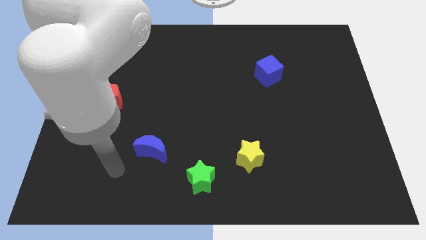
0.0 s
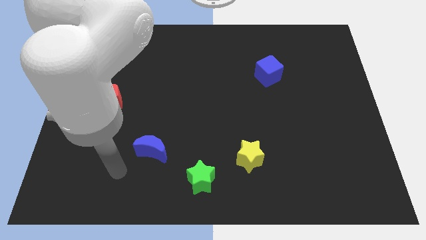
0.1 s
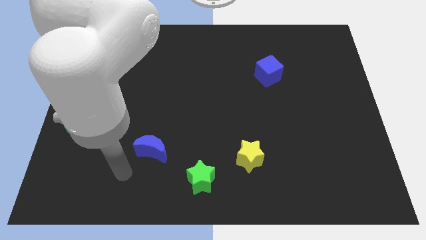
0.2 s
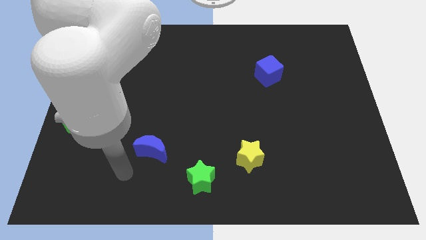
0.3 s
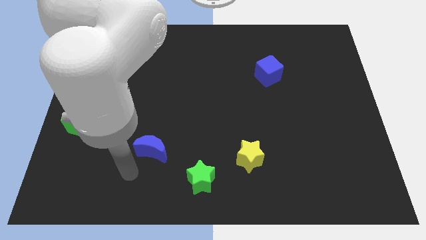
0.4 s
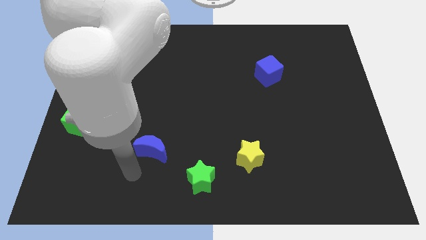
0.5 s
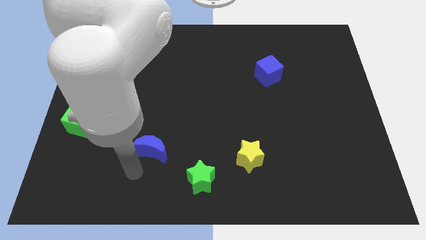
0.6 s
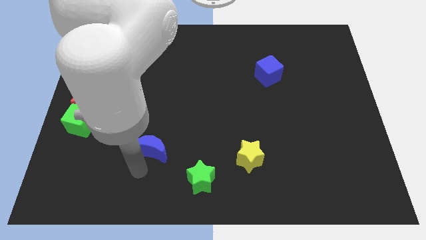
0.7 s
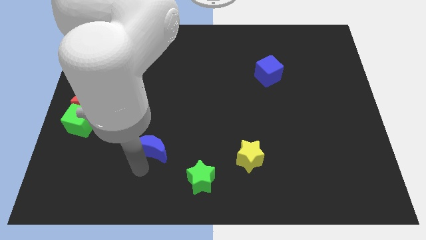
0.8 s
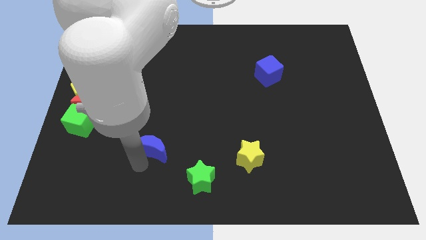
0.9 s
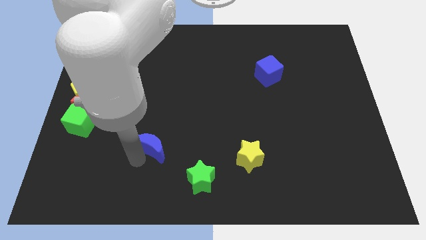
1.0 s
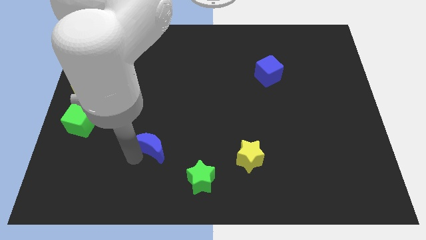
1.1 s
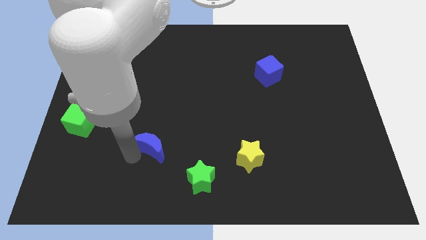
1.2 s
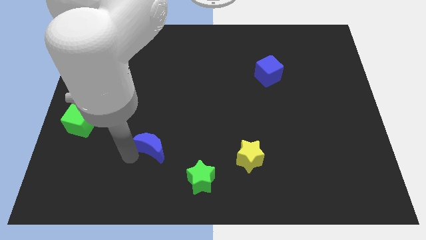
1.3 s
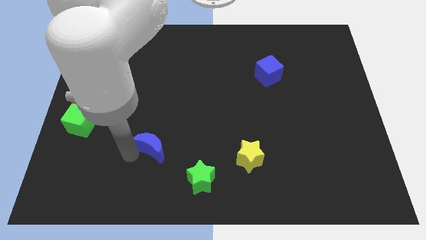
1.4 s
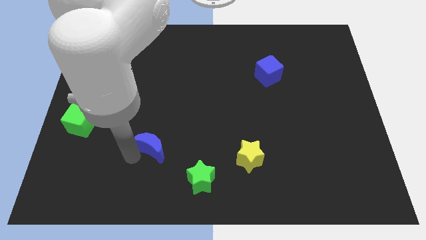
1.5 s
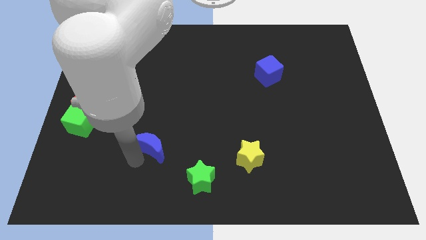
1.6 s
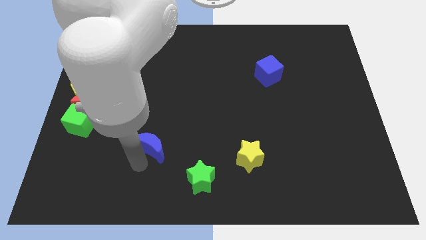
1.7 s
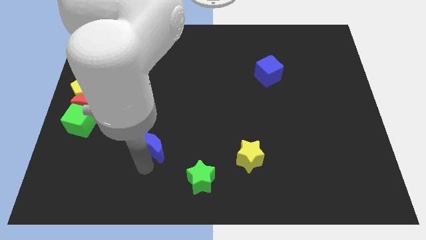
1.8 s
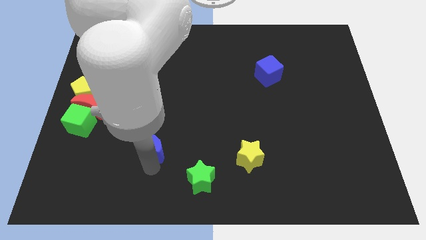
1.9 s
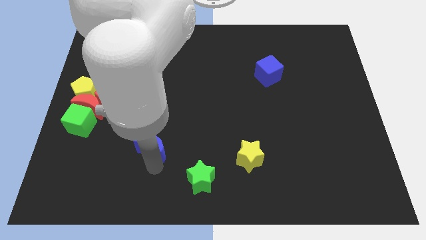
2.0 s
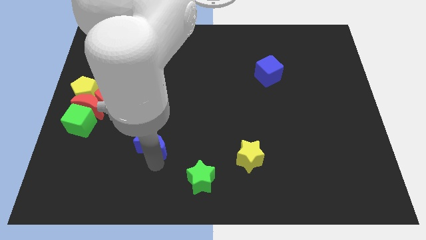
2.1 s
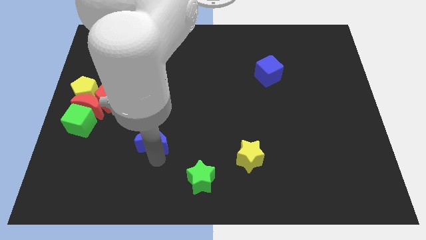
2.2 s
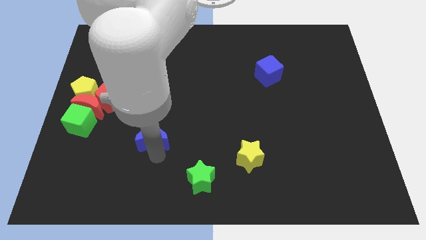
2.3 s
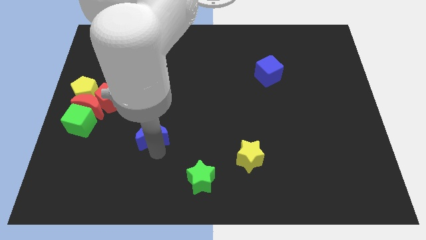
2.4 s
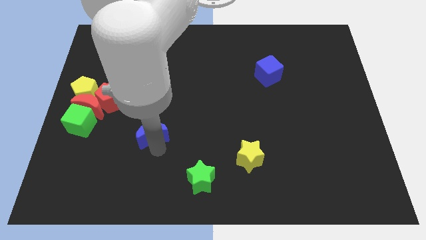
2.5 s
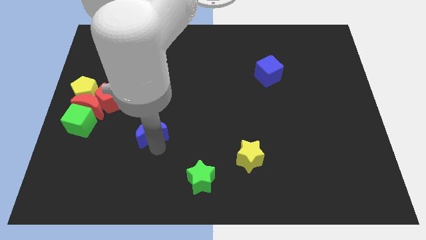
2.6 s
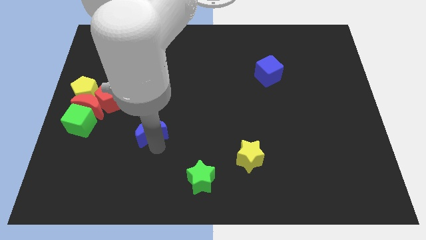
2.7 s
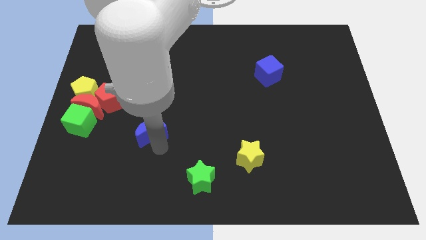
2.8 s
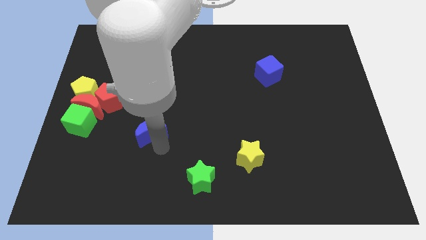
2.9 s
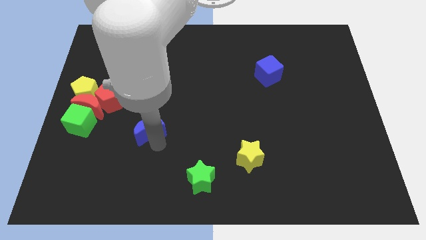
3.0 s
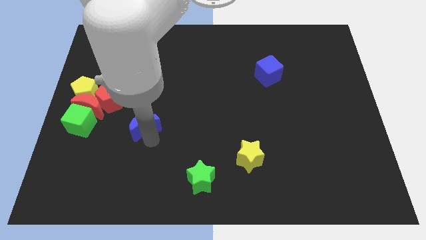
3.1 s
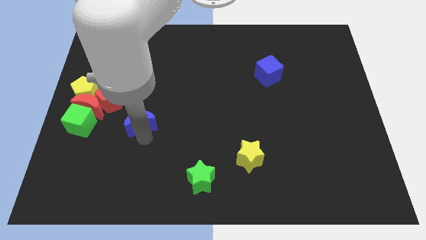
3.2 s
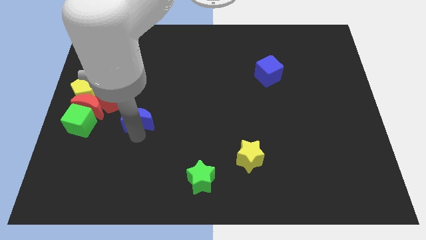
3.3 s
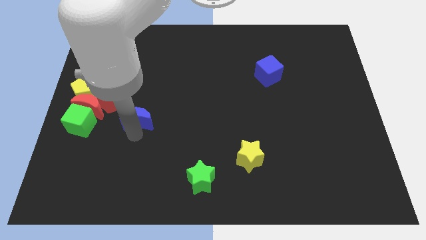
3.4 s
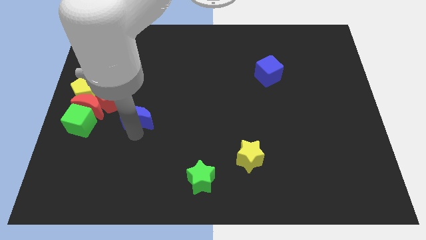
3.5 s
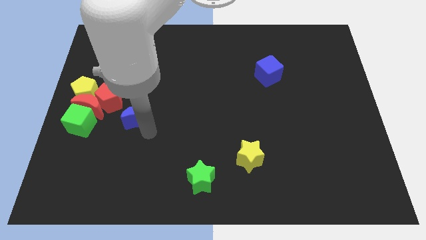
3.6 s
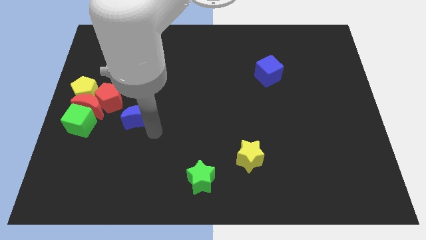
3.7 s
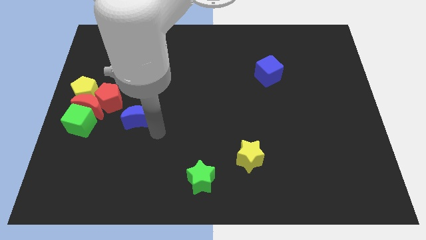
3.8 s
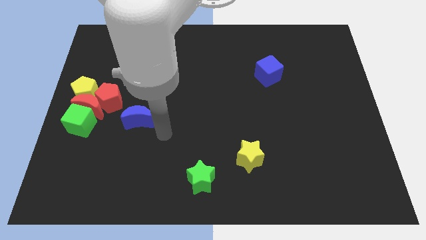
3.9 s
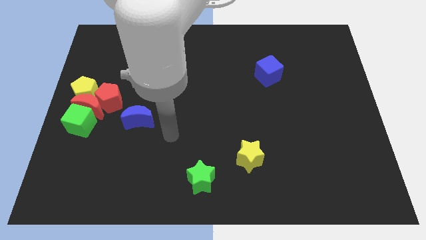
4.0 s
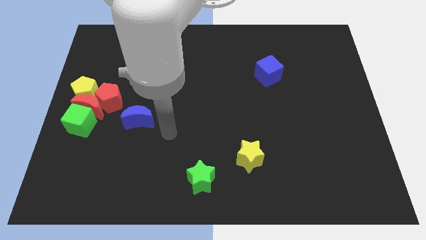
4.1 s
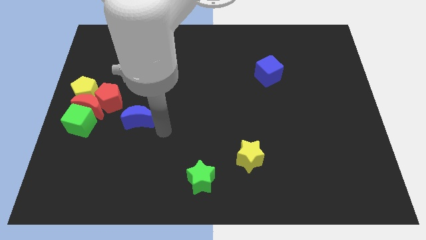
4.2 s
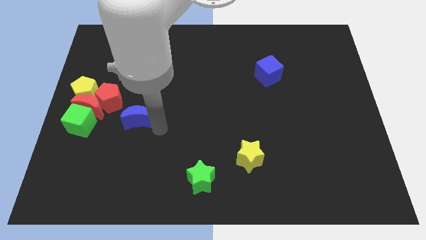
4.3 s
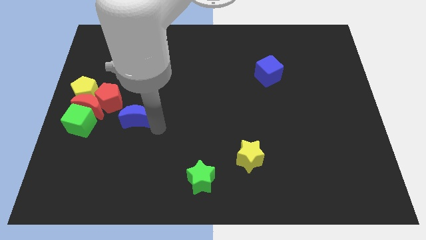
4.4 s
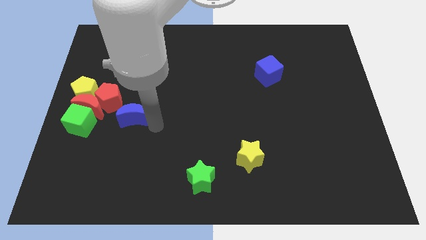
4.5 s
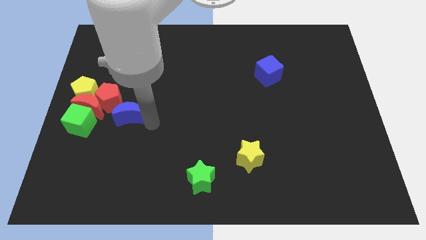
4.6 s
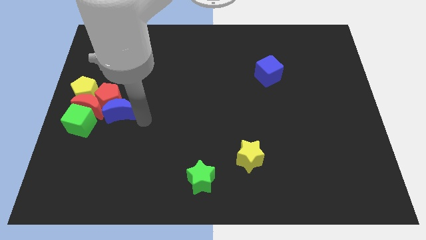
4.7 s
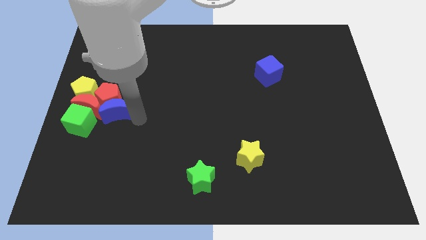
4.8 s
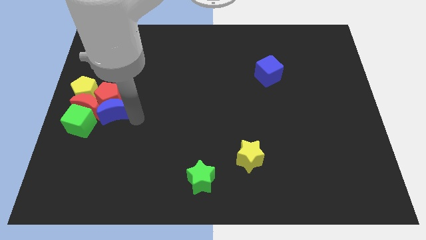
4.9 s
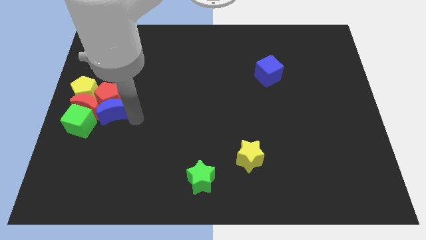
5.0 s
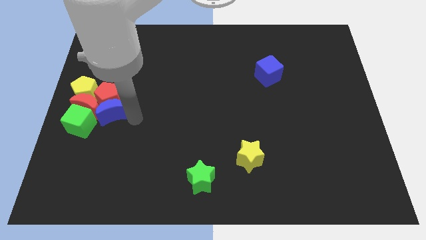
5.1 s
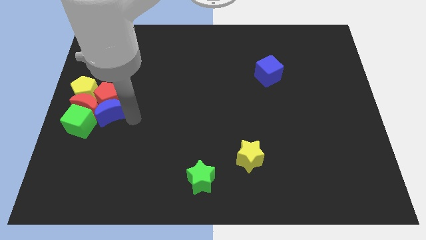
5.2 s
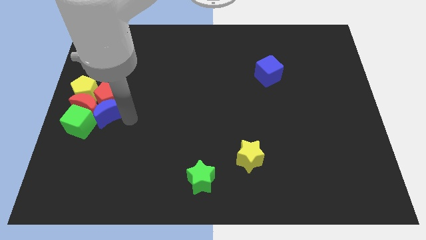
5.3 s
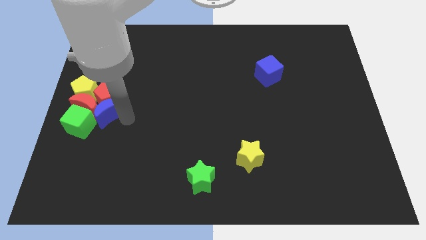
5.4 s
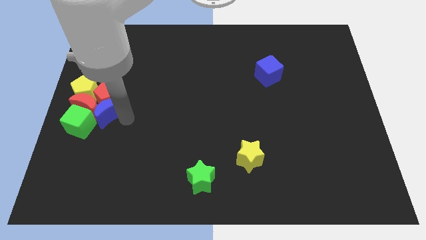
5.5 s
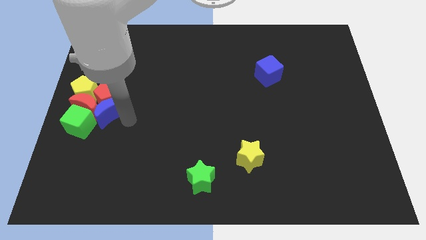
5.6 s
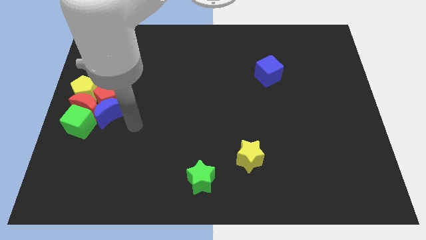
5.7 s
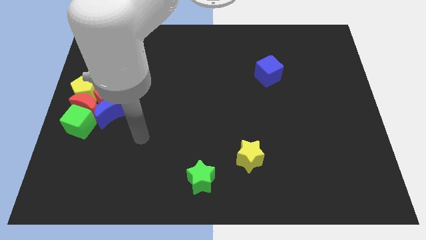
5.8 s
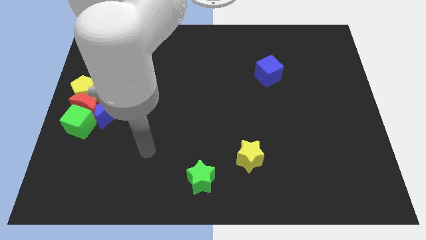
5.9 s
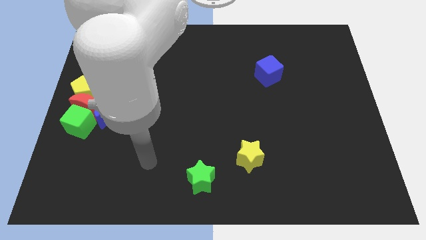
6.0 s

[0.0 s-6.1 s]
push the blue crescent to the group of blocks

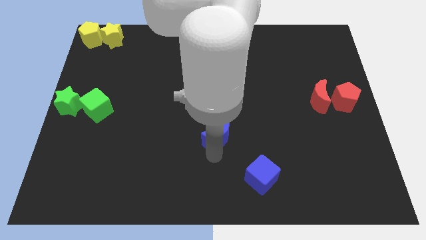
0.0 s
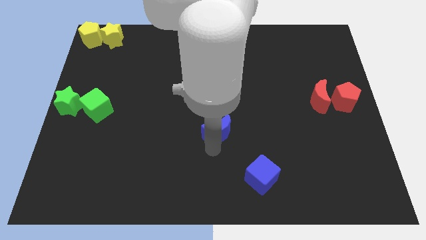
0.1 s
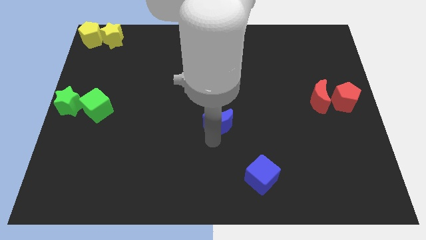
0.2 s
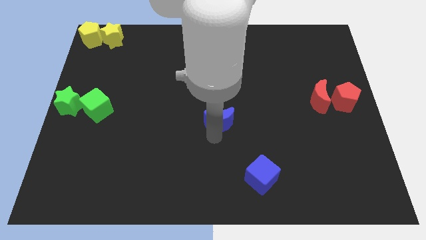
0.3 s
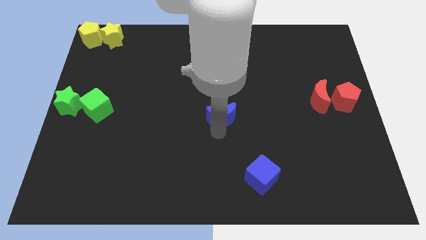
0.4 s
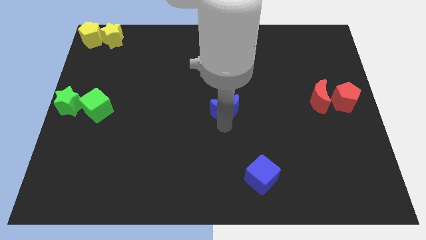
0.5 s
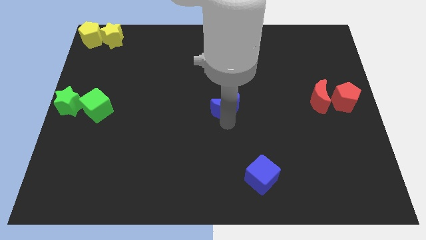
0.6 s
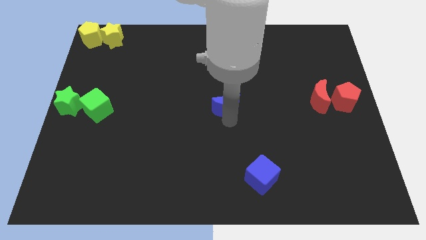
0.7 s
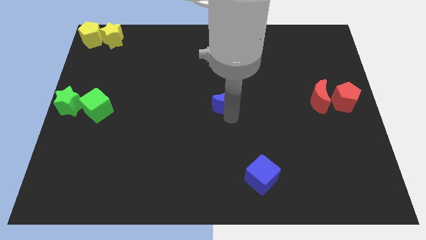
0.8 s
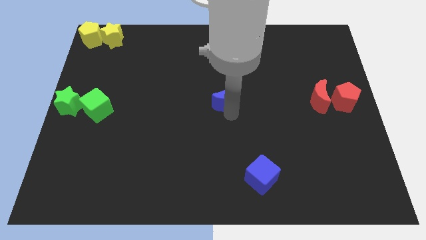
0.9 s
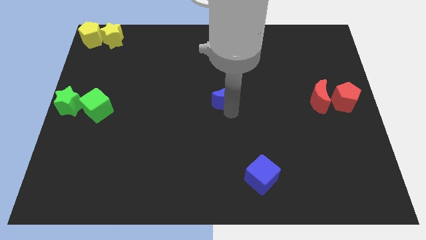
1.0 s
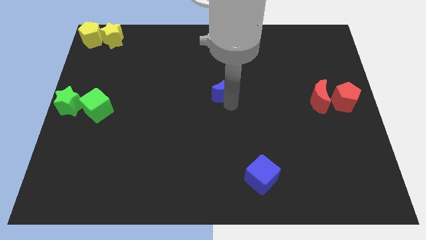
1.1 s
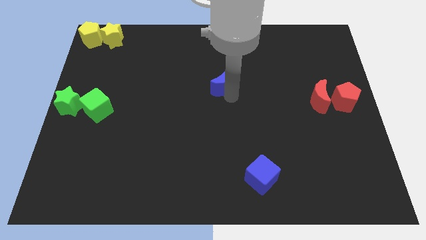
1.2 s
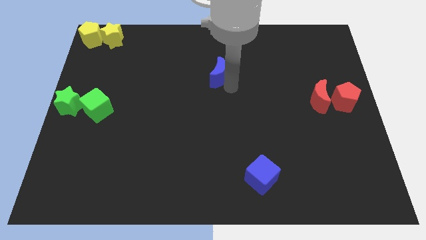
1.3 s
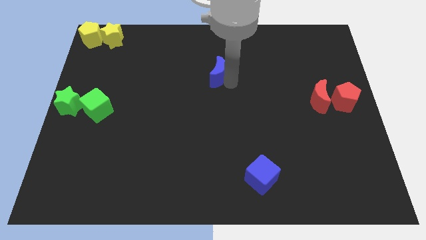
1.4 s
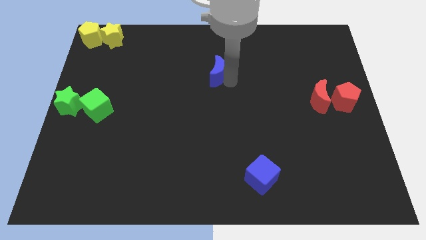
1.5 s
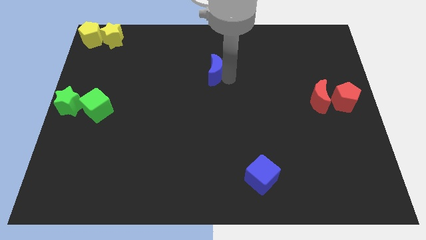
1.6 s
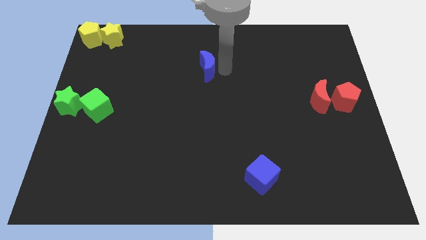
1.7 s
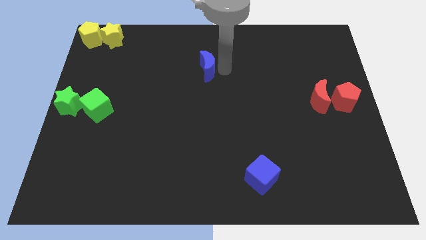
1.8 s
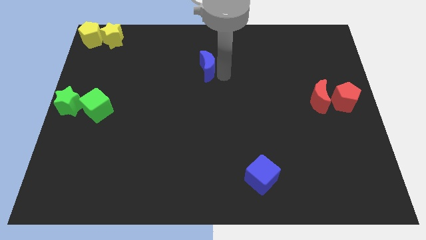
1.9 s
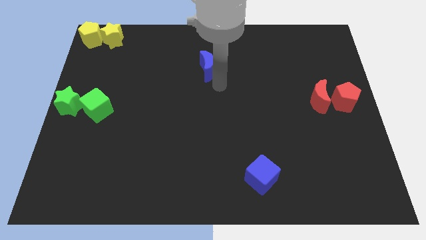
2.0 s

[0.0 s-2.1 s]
move the blue moon upwards

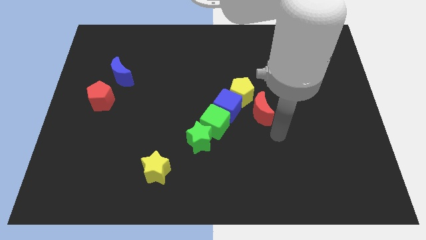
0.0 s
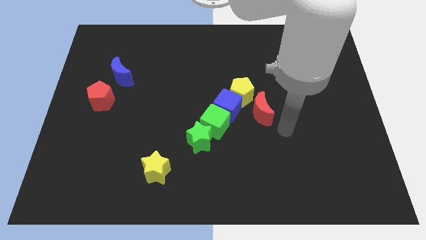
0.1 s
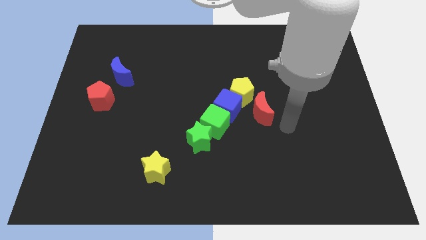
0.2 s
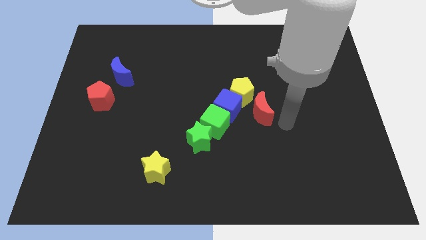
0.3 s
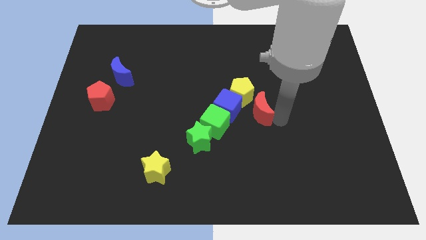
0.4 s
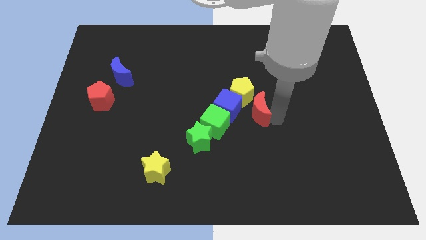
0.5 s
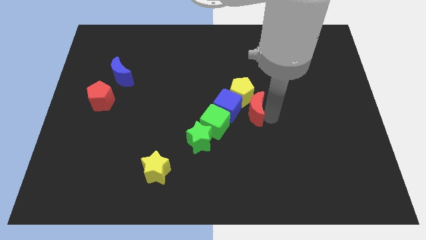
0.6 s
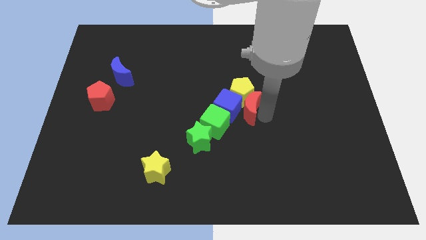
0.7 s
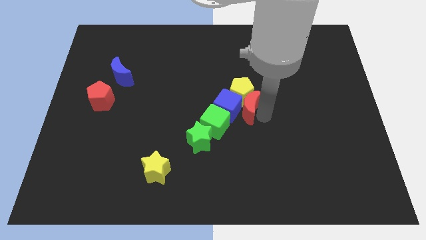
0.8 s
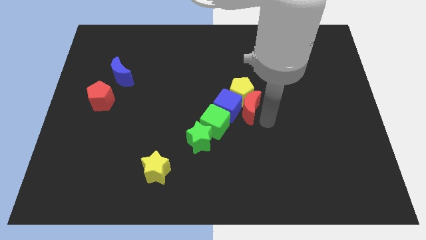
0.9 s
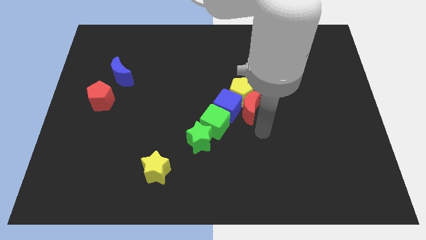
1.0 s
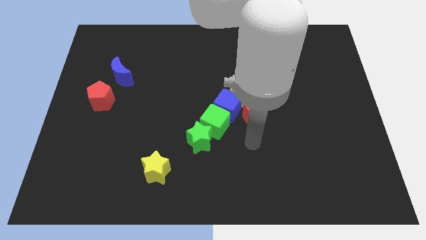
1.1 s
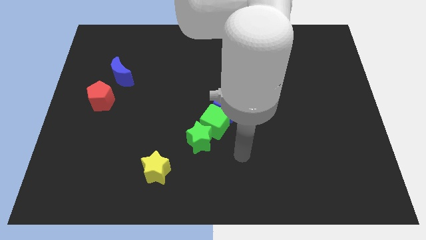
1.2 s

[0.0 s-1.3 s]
move the red crescent slight left side beside the blue cube
